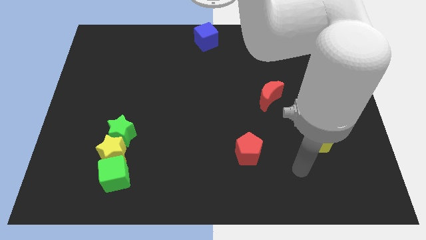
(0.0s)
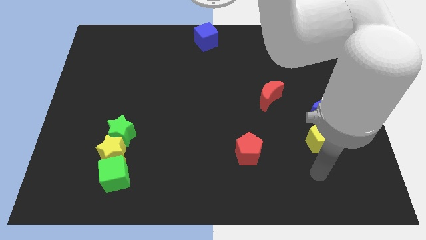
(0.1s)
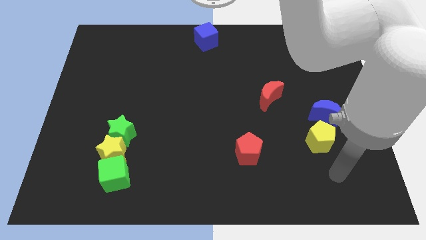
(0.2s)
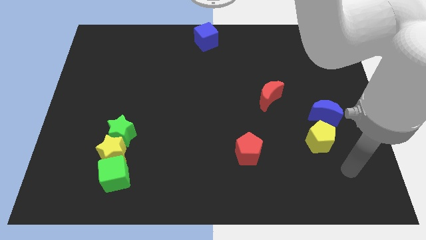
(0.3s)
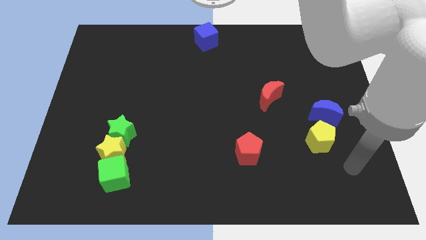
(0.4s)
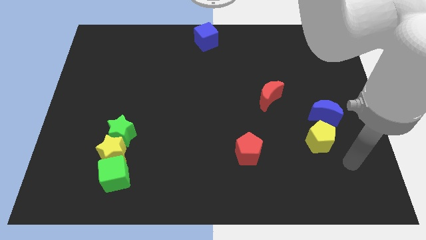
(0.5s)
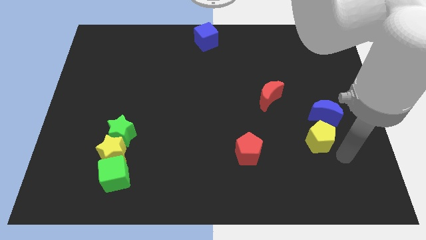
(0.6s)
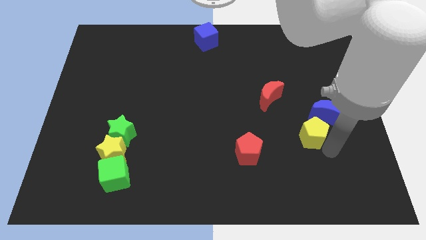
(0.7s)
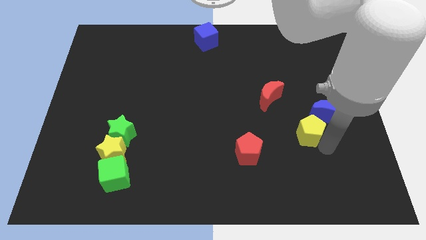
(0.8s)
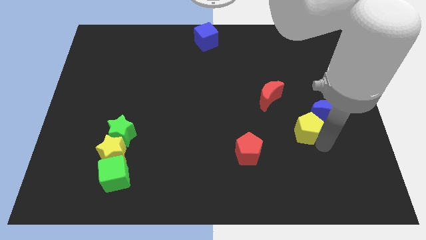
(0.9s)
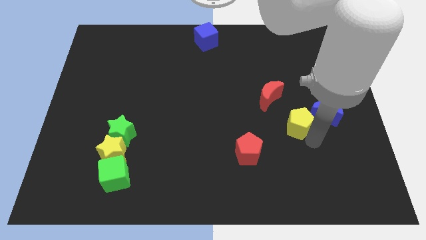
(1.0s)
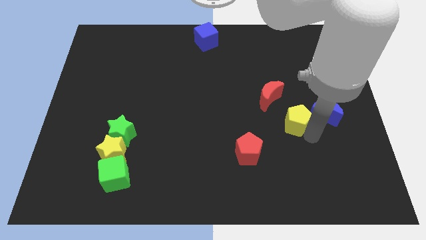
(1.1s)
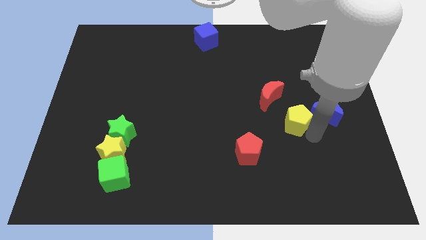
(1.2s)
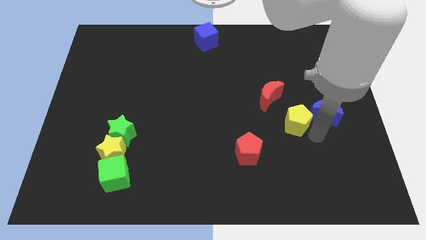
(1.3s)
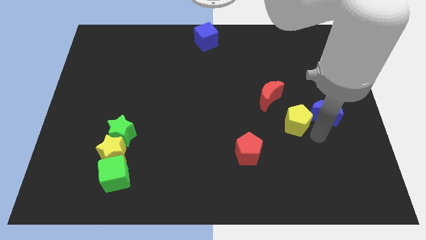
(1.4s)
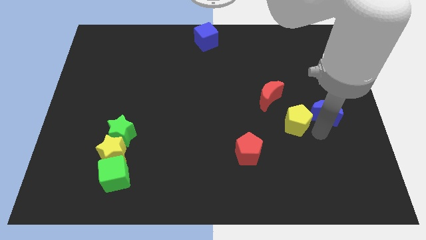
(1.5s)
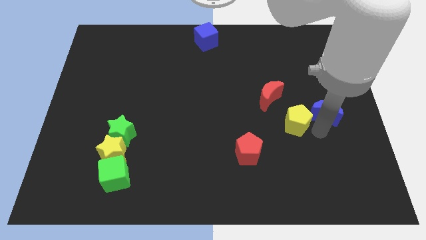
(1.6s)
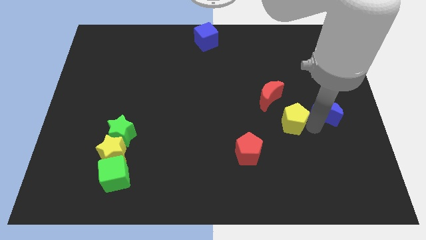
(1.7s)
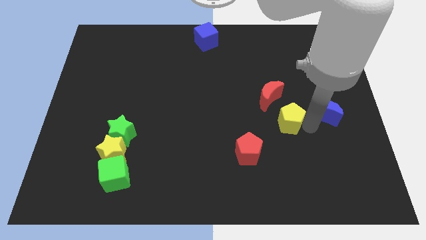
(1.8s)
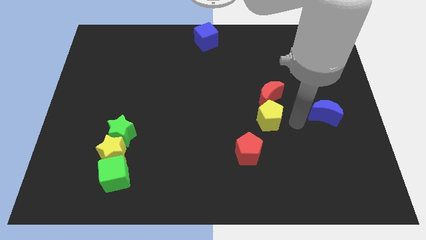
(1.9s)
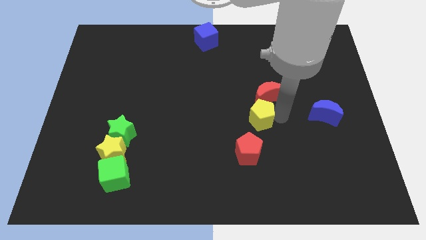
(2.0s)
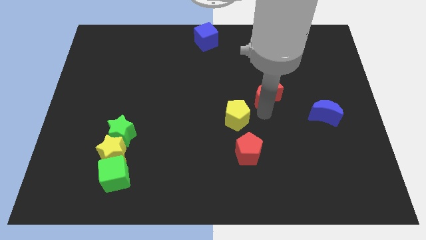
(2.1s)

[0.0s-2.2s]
place the yellow pentagon above the red pentagon

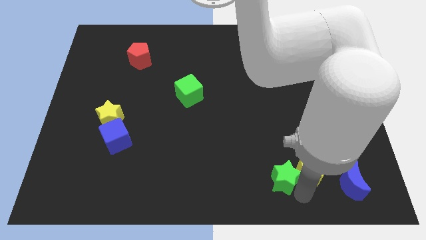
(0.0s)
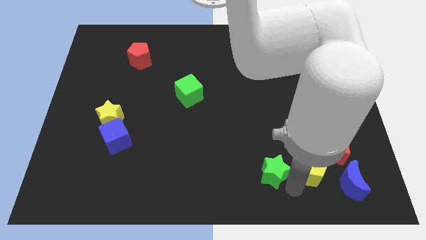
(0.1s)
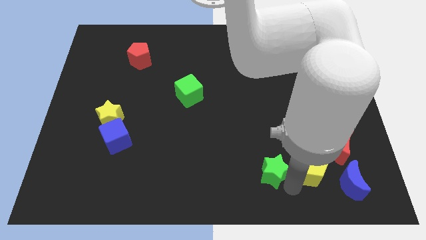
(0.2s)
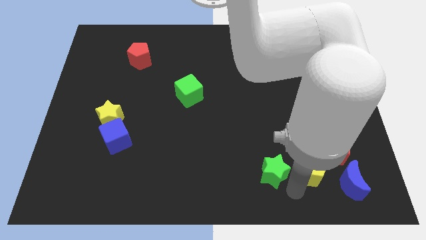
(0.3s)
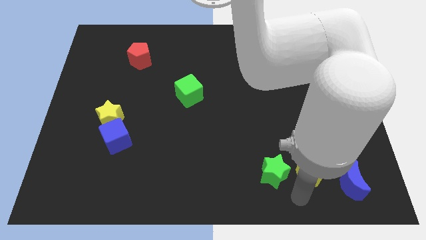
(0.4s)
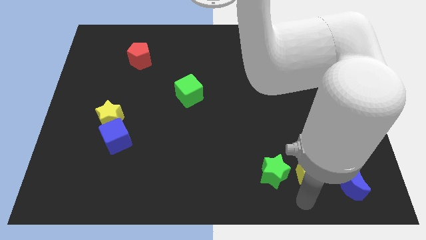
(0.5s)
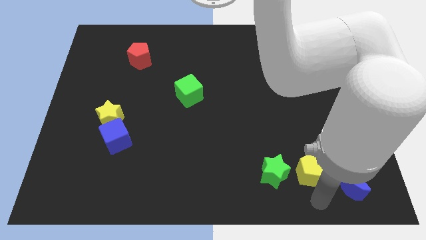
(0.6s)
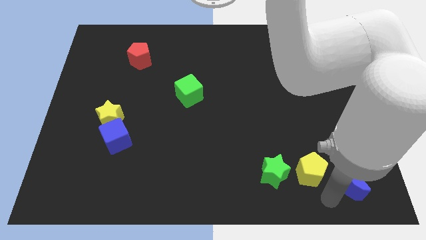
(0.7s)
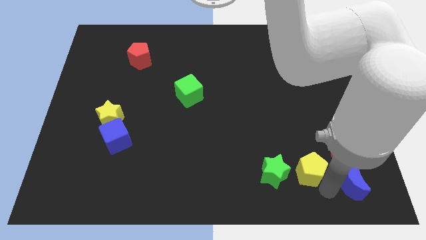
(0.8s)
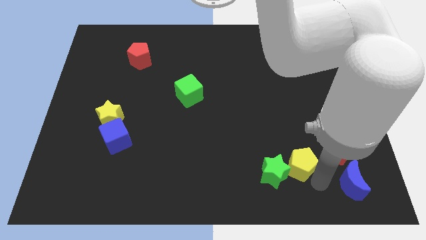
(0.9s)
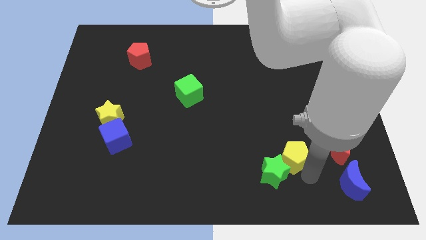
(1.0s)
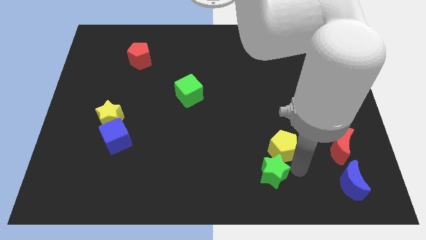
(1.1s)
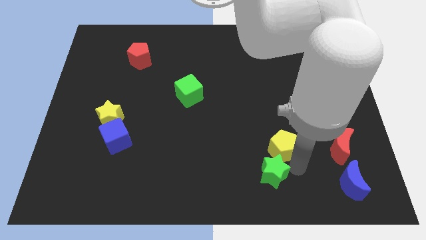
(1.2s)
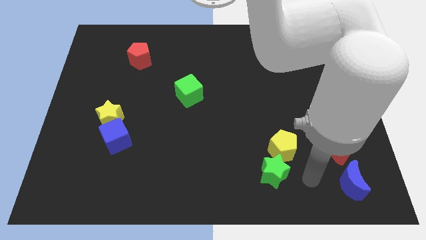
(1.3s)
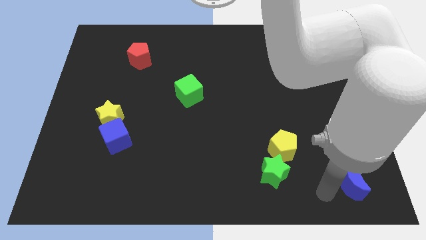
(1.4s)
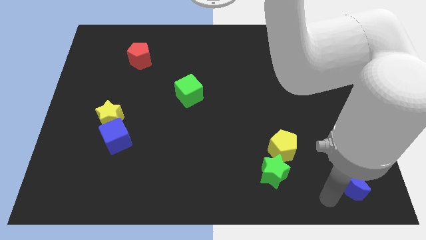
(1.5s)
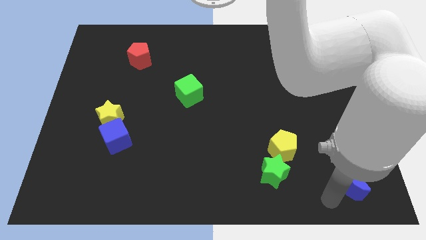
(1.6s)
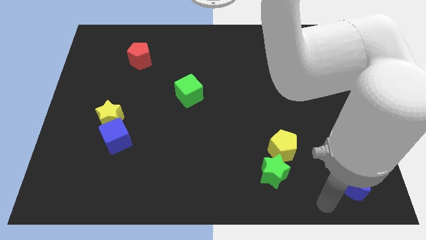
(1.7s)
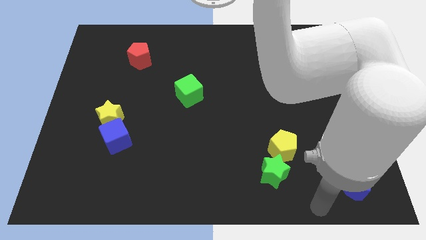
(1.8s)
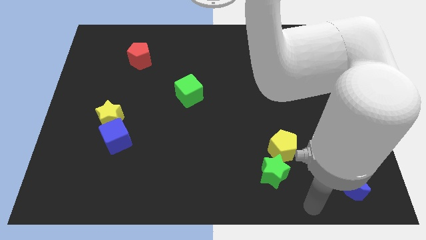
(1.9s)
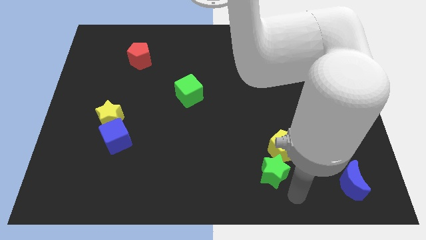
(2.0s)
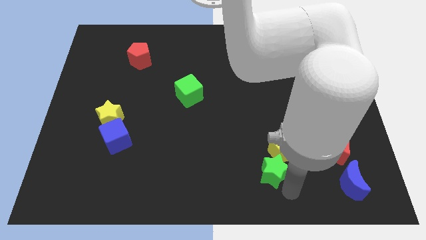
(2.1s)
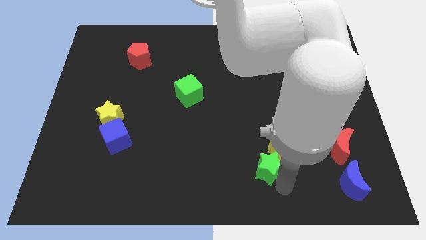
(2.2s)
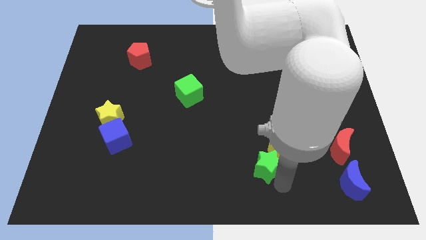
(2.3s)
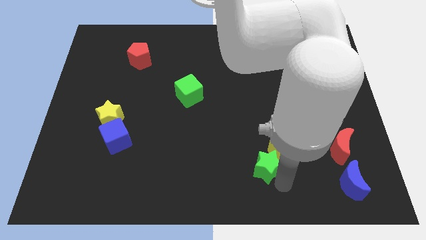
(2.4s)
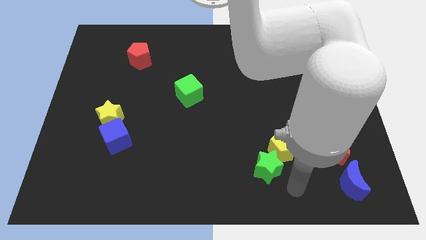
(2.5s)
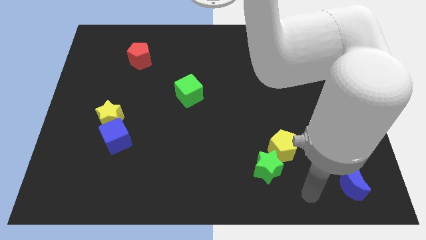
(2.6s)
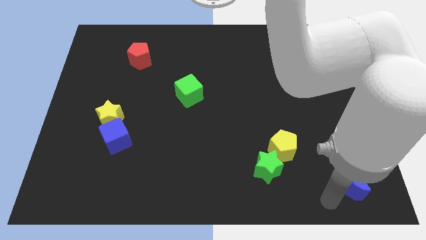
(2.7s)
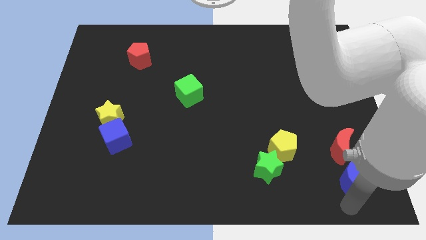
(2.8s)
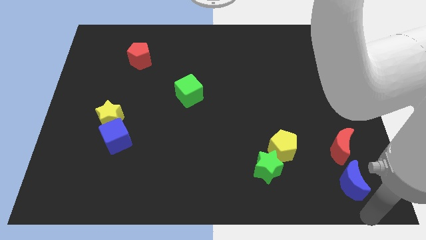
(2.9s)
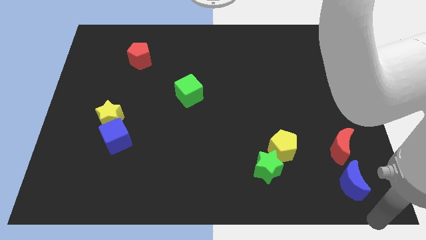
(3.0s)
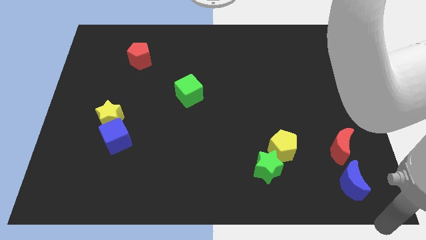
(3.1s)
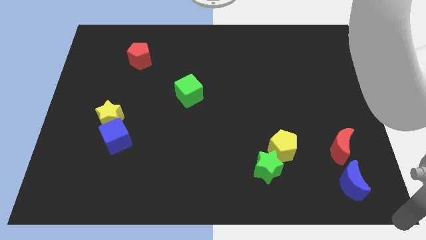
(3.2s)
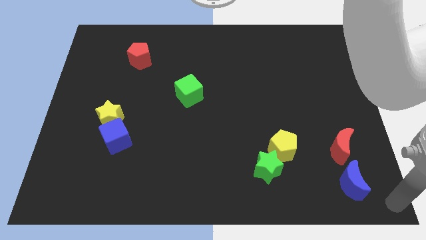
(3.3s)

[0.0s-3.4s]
move your arm to the bottom right of the board

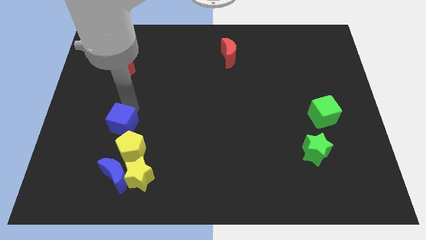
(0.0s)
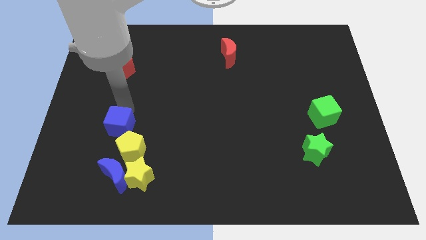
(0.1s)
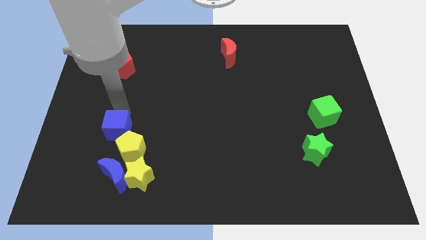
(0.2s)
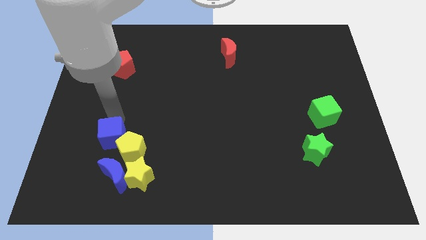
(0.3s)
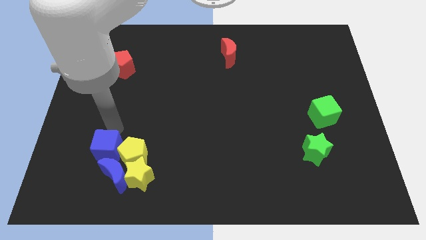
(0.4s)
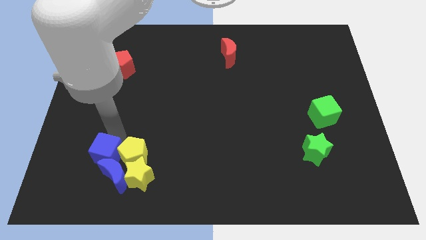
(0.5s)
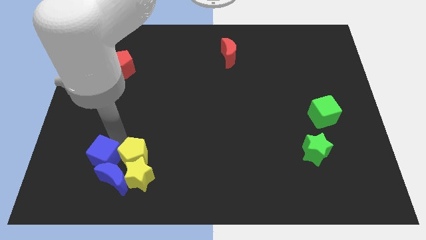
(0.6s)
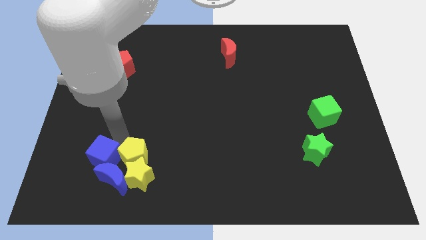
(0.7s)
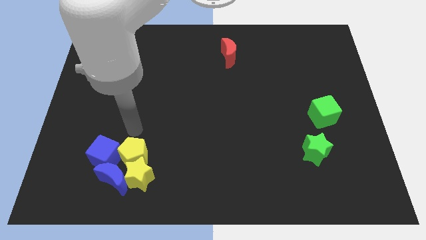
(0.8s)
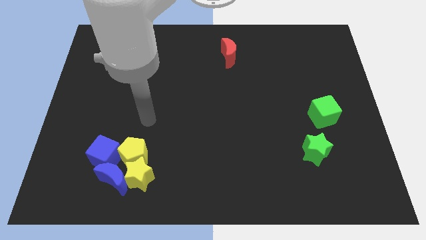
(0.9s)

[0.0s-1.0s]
place the blue cube to the left of yellow pentagon

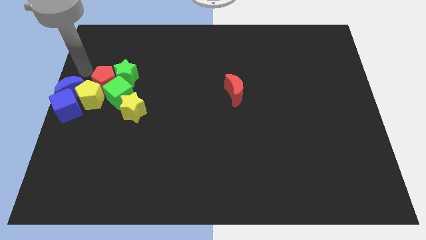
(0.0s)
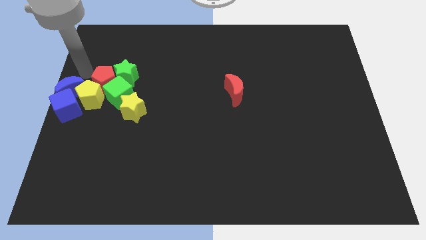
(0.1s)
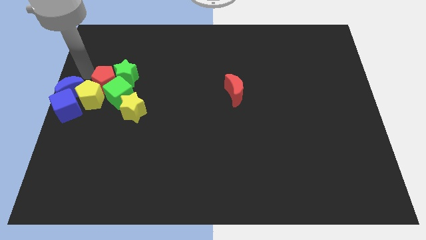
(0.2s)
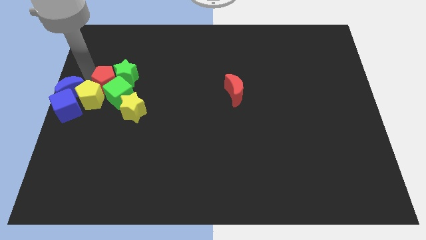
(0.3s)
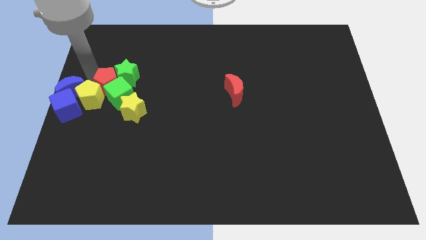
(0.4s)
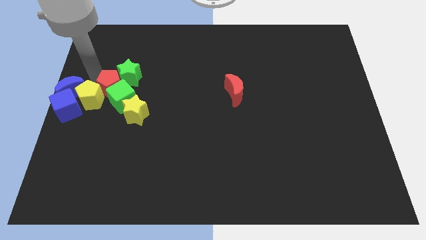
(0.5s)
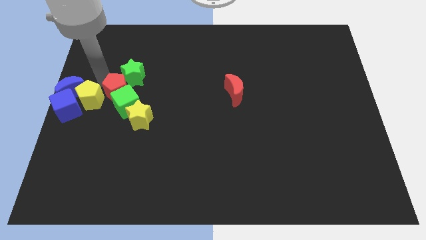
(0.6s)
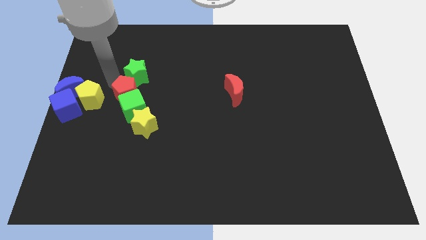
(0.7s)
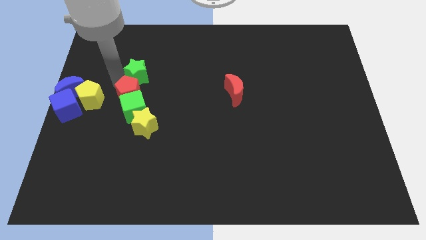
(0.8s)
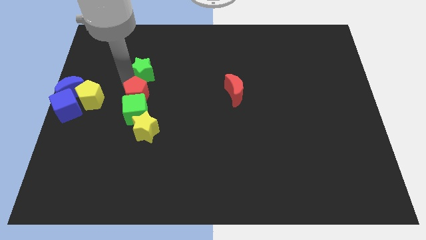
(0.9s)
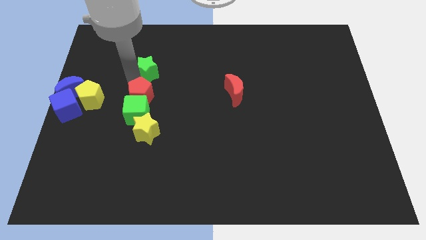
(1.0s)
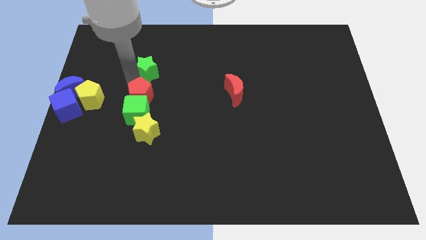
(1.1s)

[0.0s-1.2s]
place the red pentagon in between the green blocks

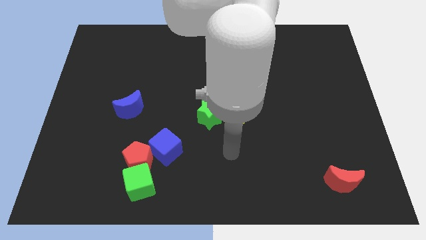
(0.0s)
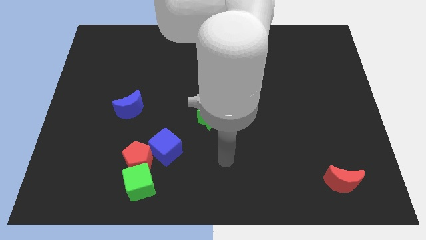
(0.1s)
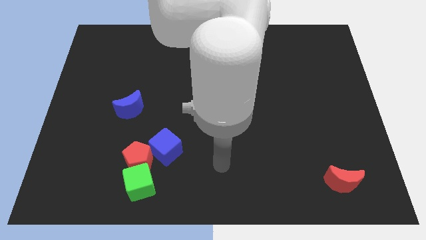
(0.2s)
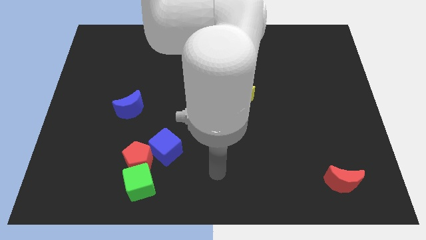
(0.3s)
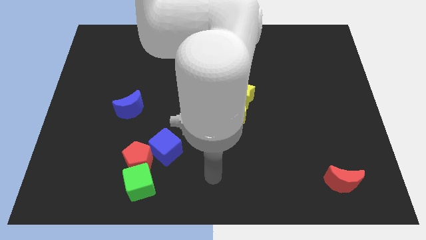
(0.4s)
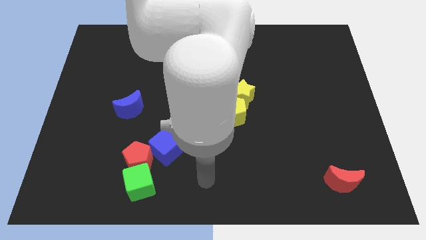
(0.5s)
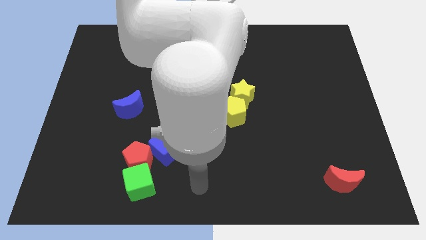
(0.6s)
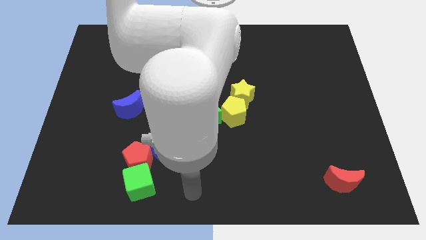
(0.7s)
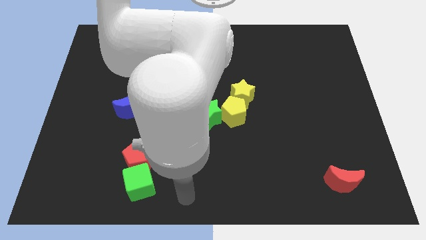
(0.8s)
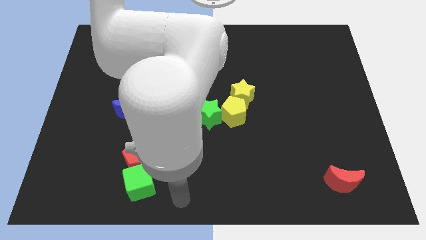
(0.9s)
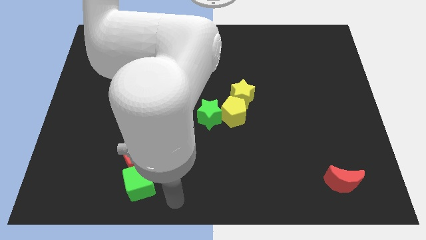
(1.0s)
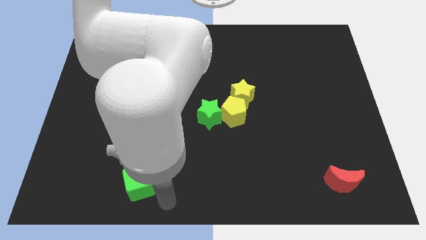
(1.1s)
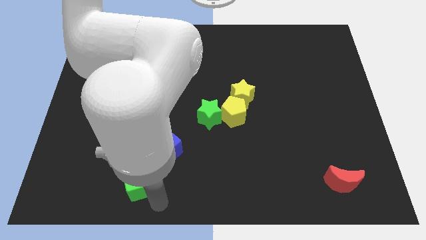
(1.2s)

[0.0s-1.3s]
move the arm towards green cube
